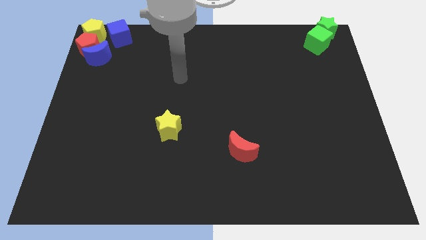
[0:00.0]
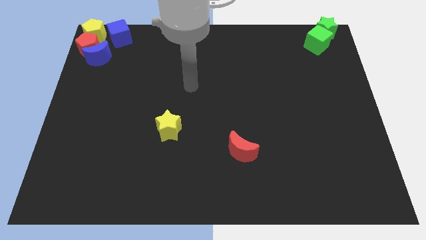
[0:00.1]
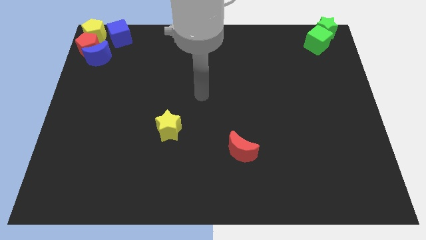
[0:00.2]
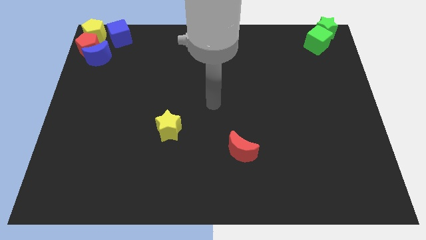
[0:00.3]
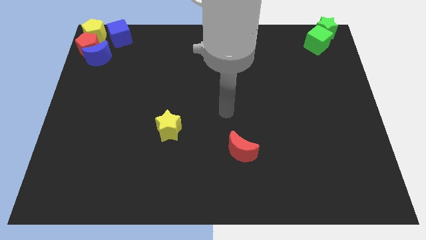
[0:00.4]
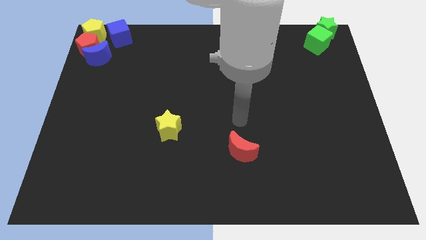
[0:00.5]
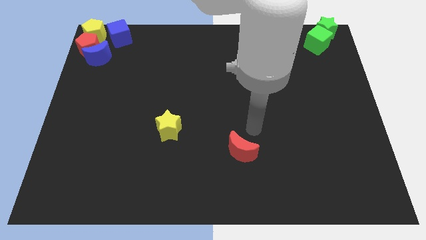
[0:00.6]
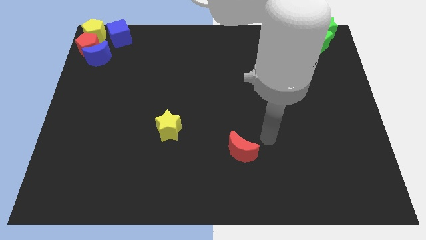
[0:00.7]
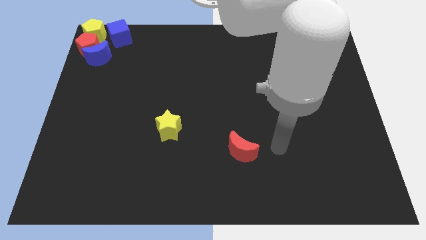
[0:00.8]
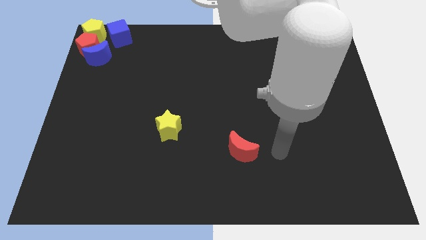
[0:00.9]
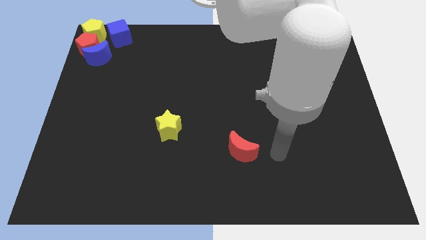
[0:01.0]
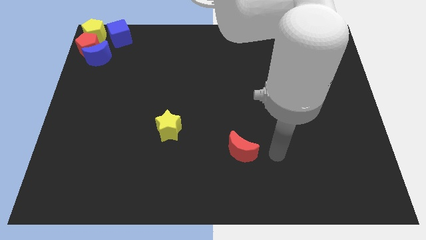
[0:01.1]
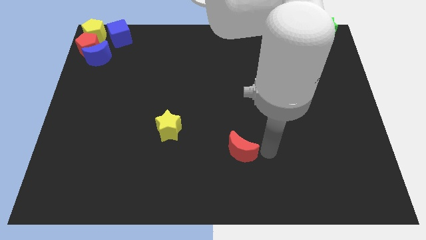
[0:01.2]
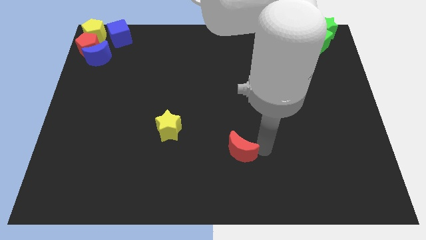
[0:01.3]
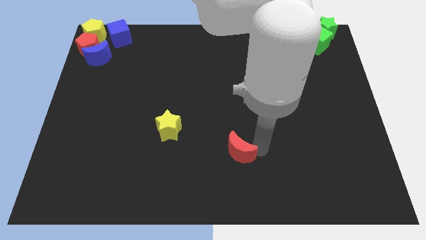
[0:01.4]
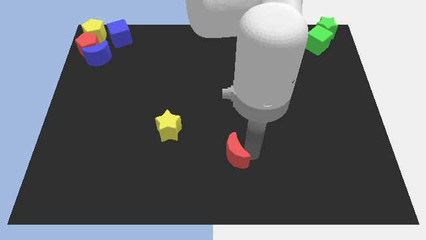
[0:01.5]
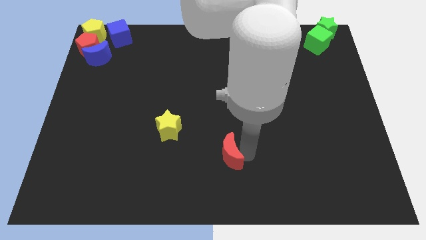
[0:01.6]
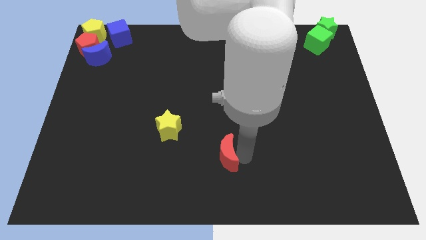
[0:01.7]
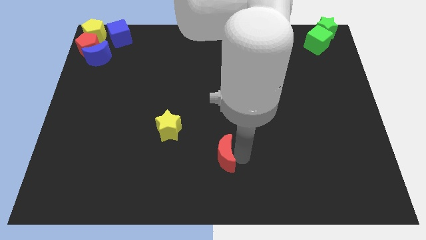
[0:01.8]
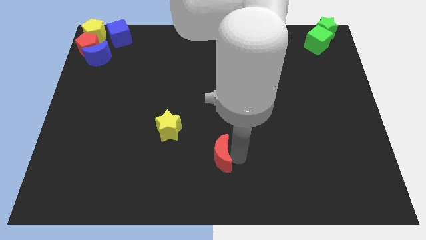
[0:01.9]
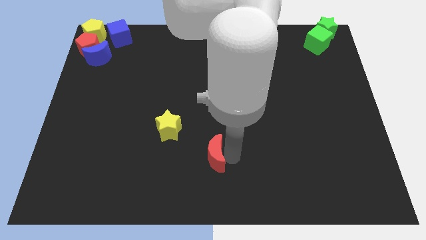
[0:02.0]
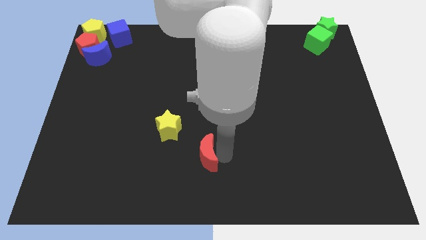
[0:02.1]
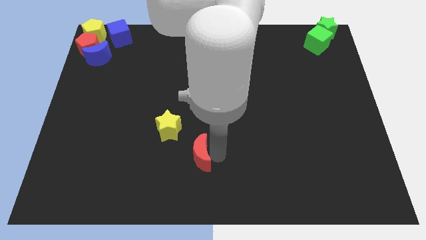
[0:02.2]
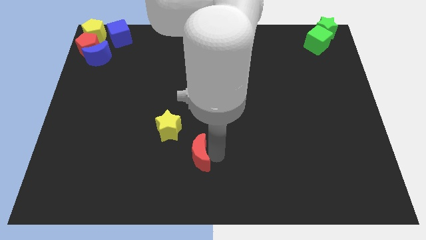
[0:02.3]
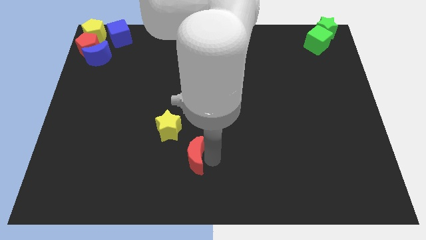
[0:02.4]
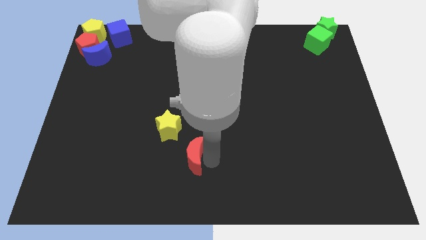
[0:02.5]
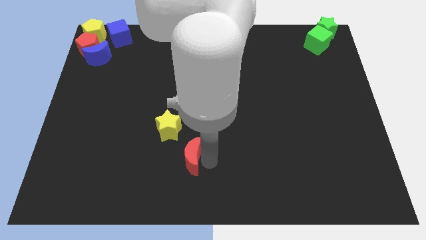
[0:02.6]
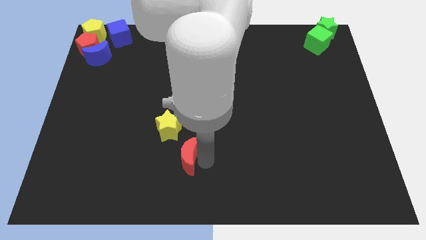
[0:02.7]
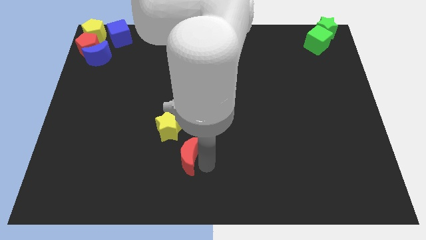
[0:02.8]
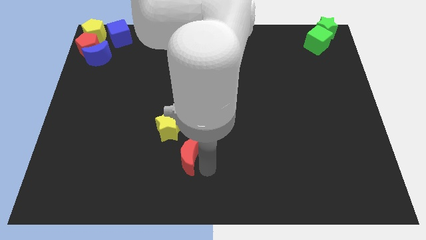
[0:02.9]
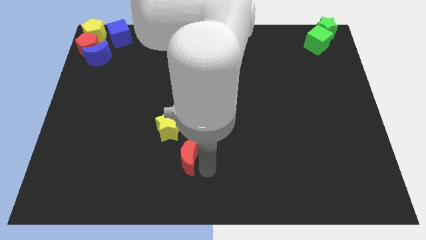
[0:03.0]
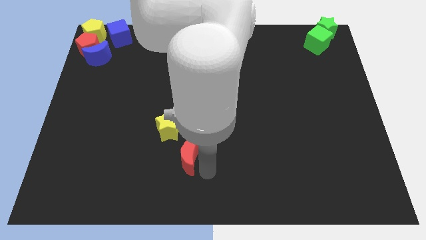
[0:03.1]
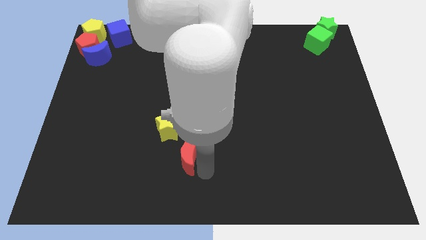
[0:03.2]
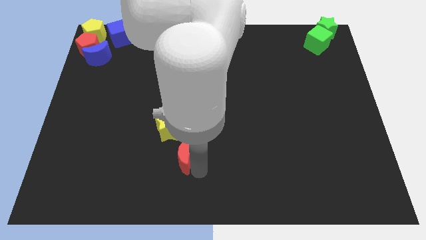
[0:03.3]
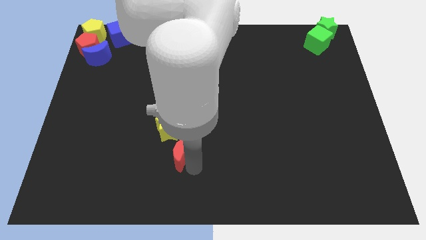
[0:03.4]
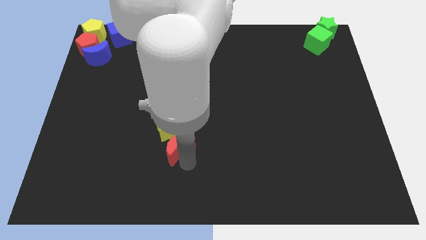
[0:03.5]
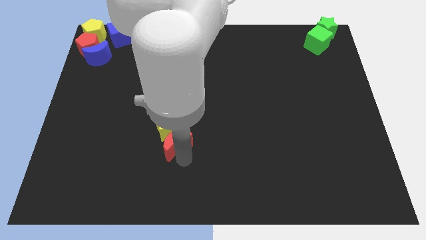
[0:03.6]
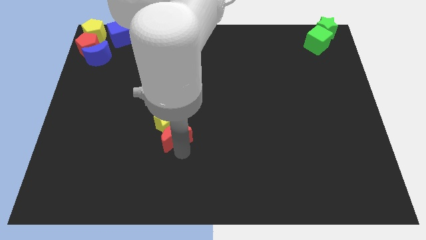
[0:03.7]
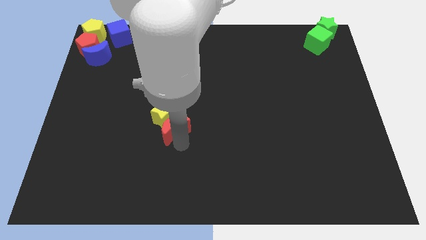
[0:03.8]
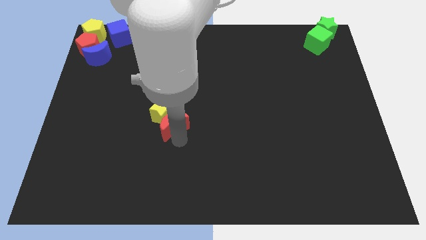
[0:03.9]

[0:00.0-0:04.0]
move the red crescent into the bottom side of the yellow star

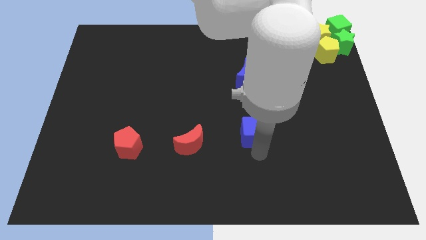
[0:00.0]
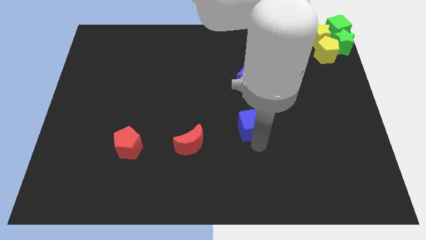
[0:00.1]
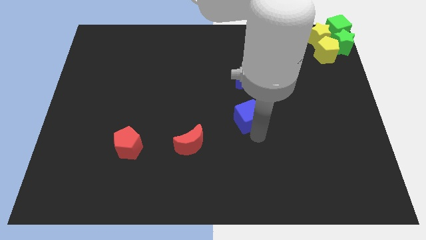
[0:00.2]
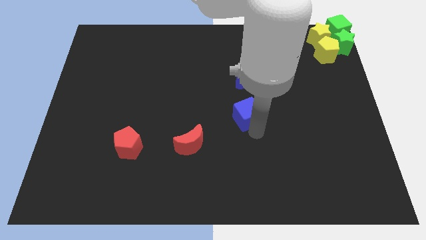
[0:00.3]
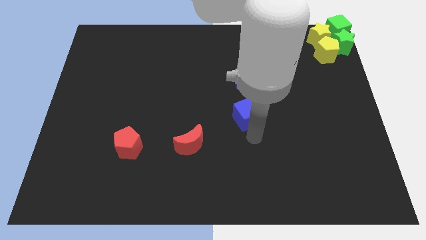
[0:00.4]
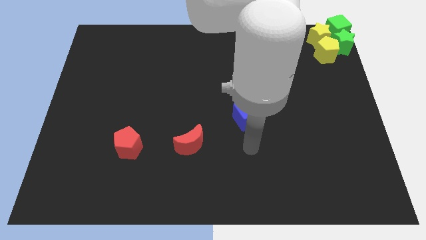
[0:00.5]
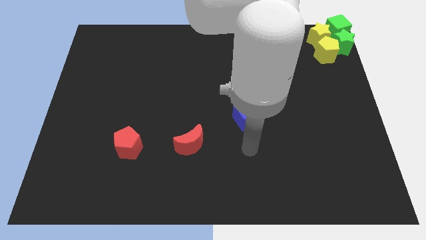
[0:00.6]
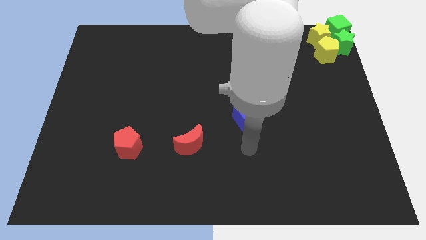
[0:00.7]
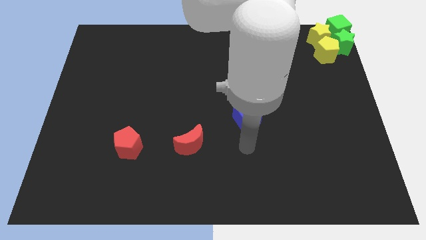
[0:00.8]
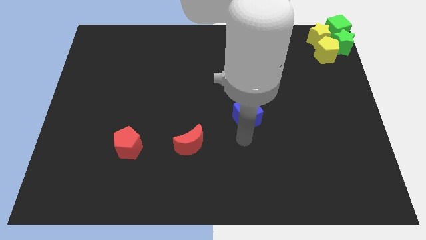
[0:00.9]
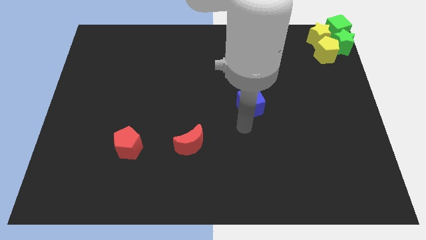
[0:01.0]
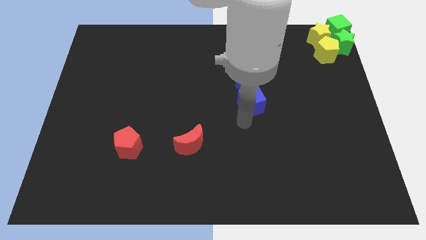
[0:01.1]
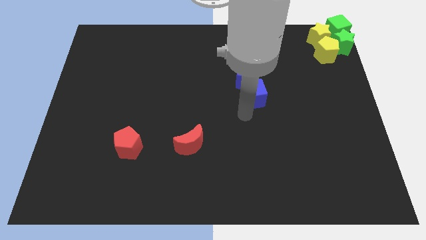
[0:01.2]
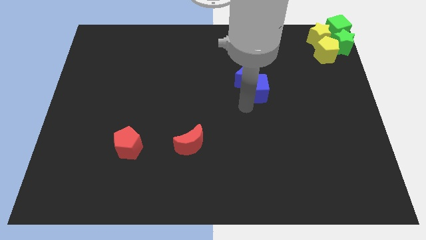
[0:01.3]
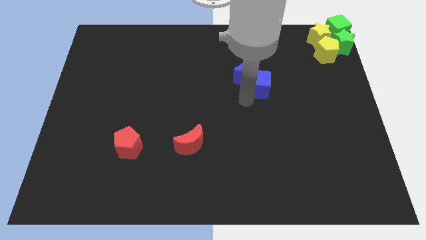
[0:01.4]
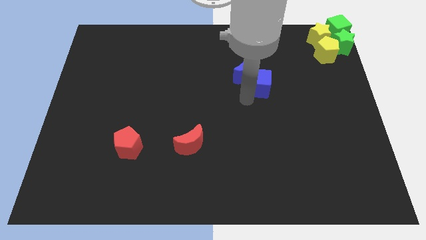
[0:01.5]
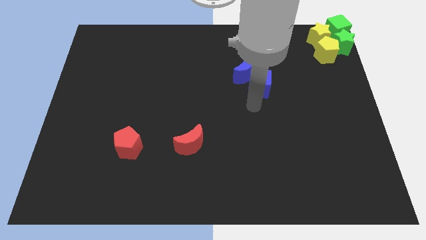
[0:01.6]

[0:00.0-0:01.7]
push the blue cube to the bottom of the blue crescent

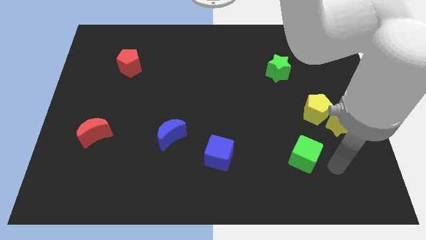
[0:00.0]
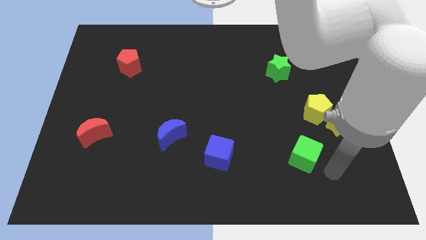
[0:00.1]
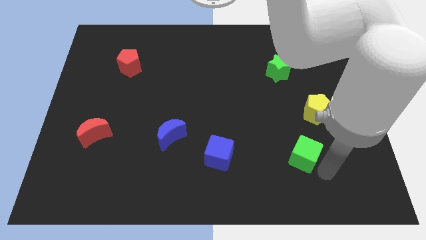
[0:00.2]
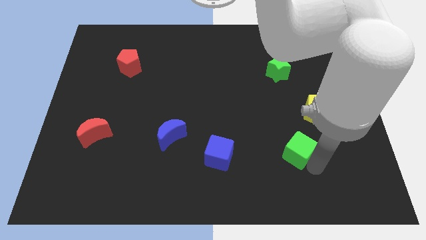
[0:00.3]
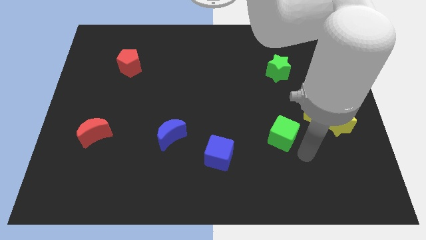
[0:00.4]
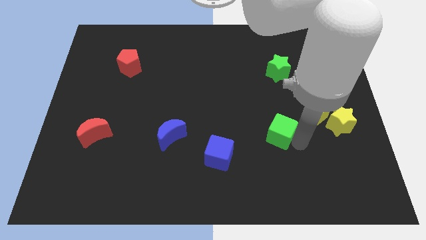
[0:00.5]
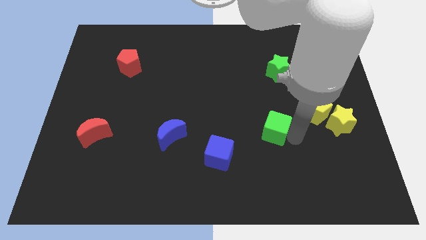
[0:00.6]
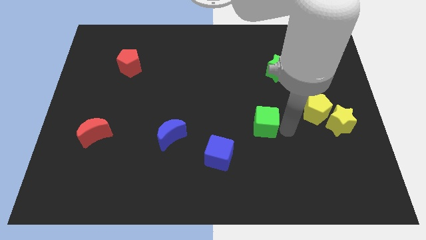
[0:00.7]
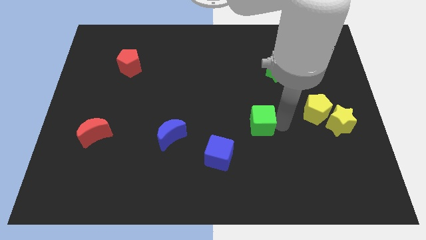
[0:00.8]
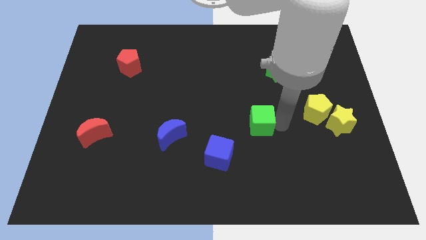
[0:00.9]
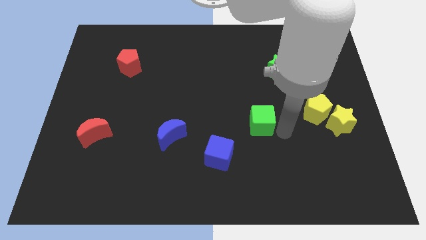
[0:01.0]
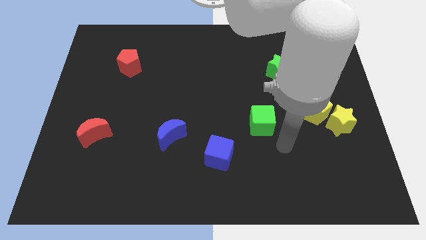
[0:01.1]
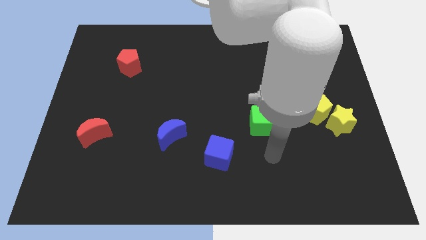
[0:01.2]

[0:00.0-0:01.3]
put the green cube diagonally top right to the blue cube

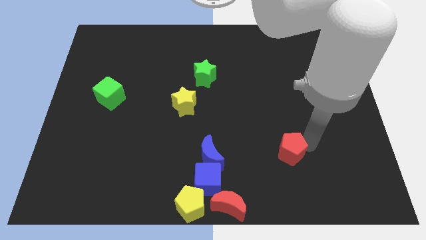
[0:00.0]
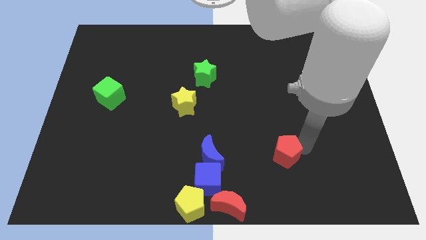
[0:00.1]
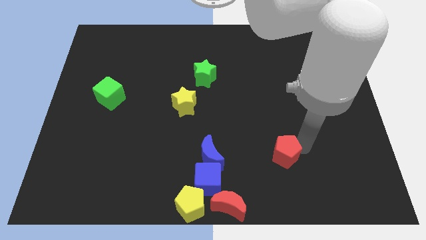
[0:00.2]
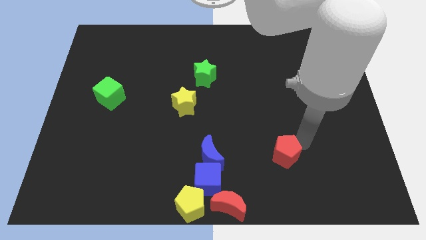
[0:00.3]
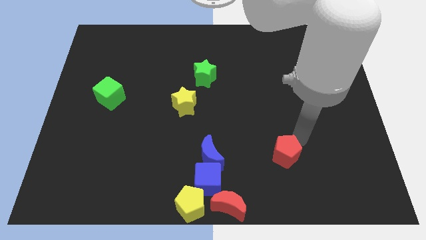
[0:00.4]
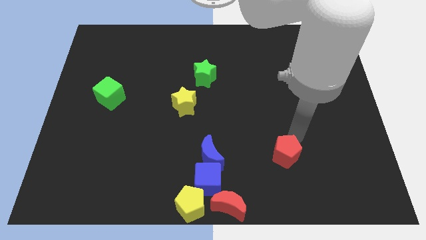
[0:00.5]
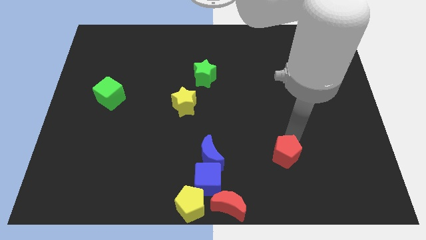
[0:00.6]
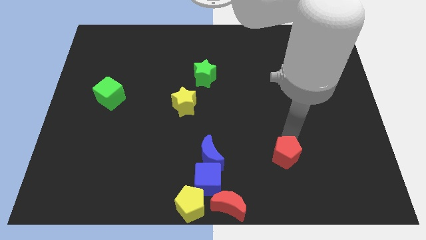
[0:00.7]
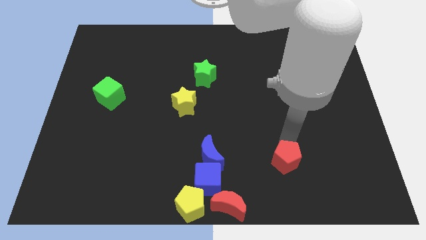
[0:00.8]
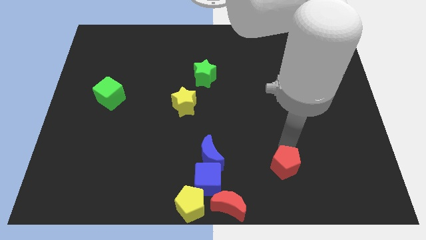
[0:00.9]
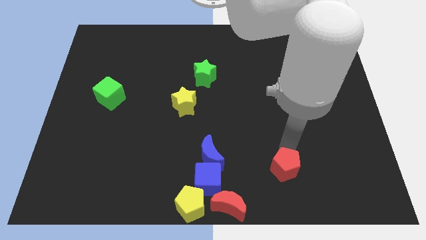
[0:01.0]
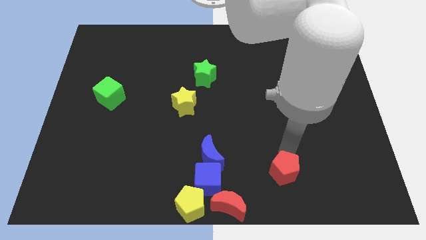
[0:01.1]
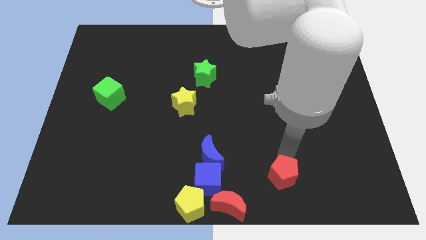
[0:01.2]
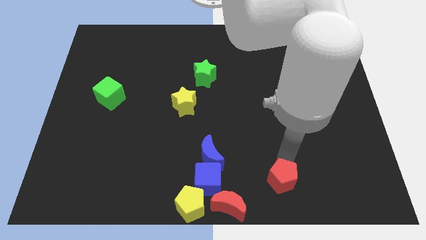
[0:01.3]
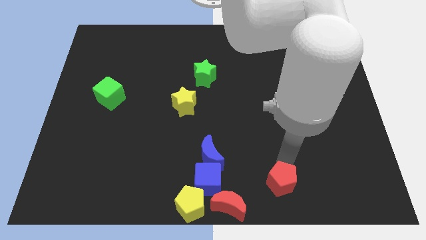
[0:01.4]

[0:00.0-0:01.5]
place the red pentagon to the right side of the blue cube

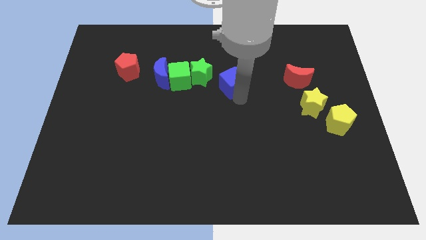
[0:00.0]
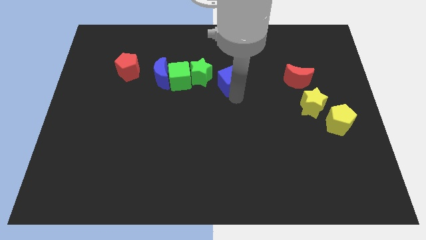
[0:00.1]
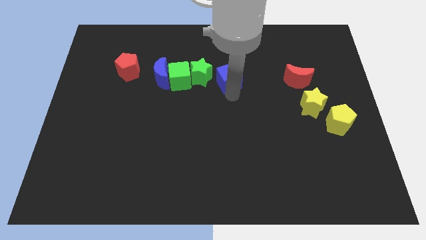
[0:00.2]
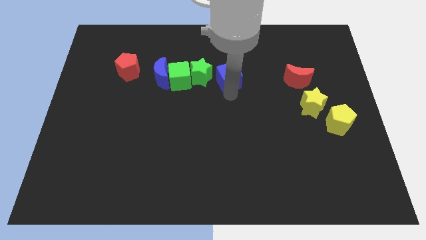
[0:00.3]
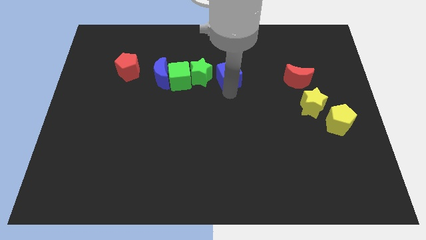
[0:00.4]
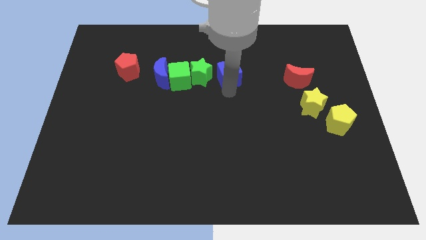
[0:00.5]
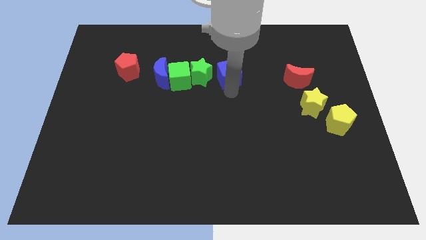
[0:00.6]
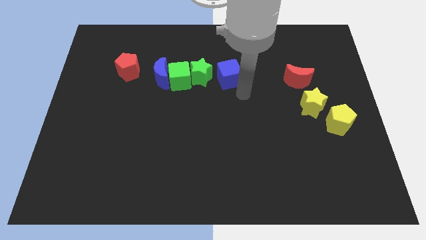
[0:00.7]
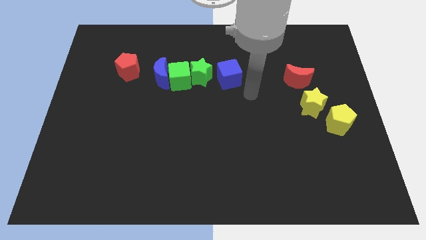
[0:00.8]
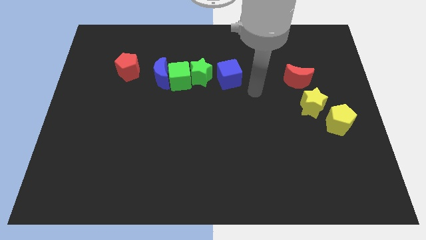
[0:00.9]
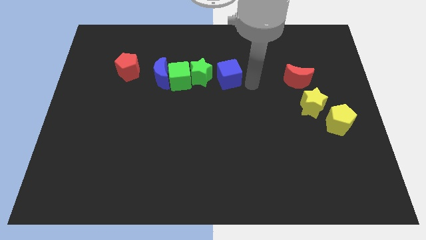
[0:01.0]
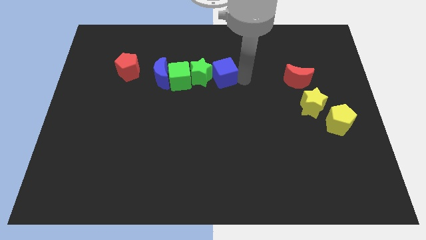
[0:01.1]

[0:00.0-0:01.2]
place blue cube right to green star
